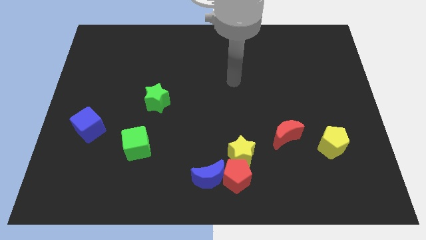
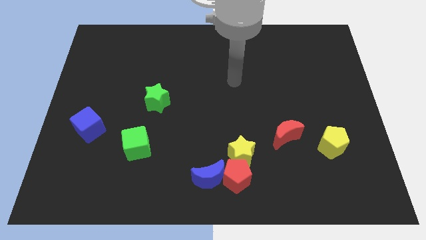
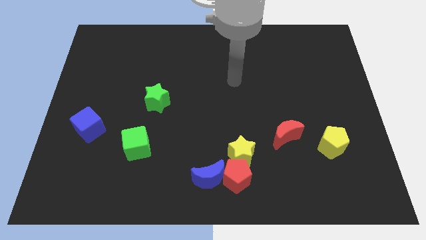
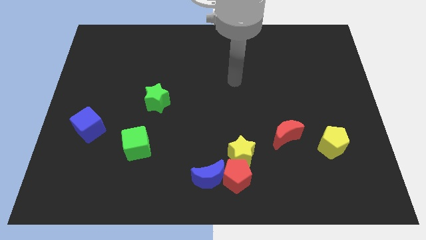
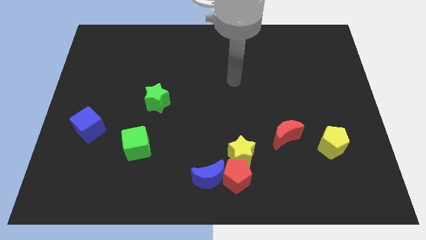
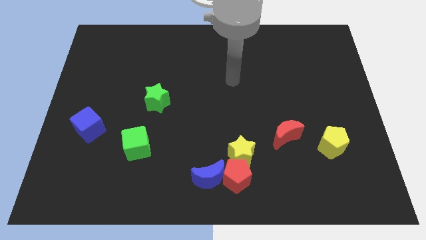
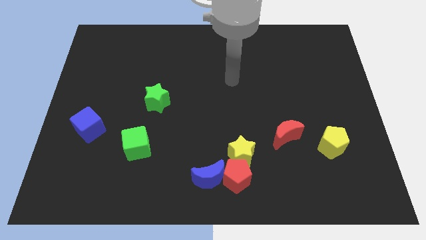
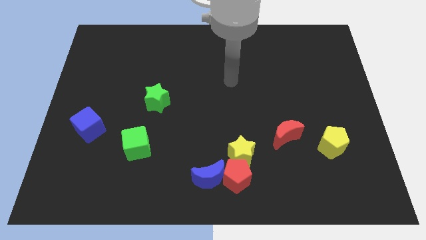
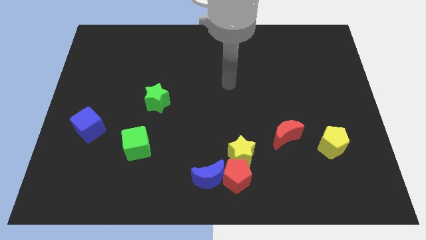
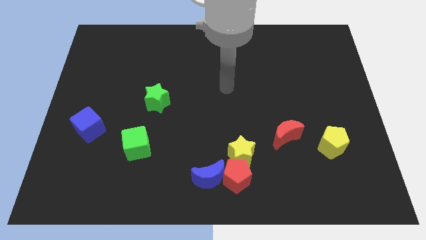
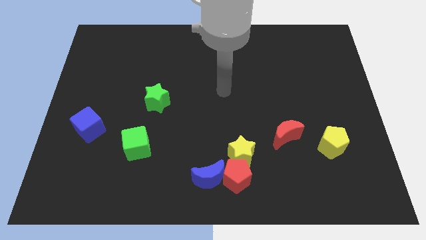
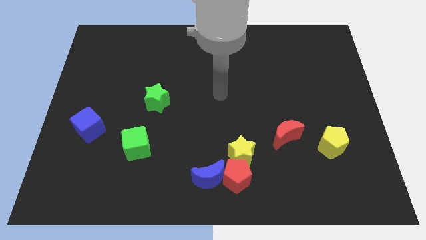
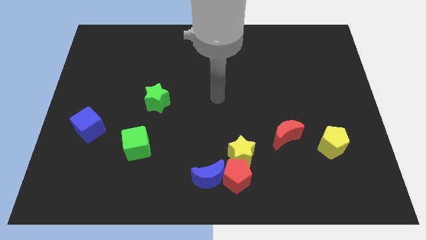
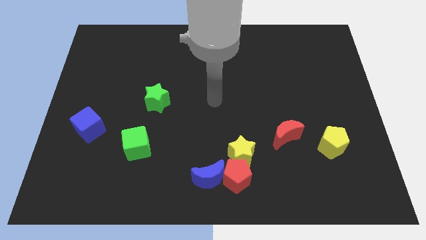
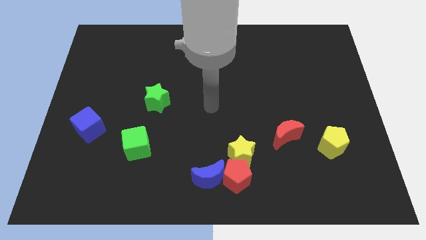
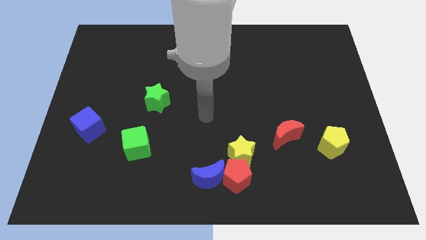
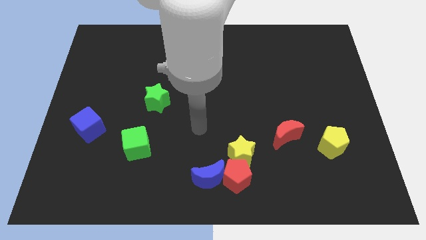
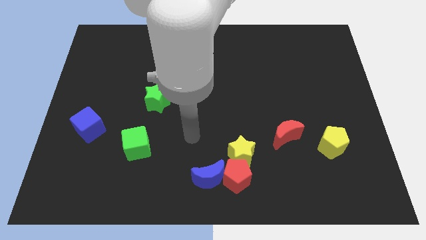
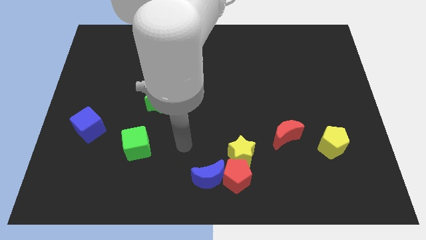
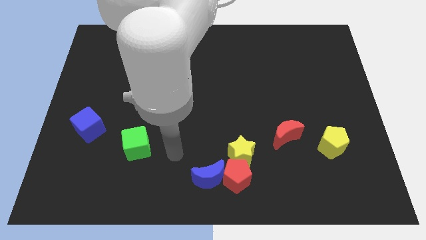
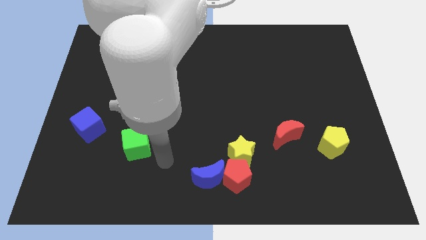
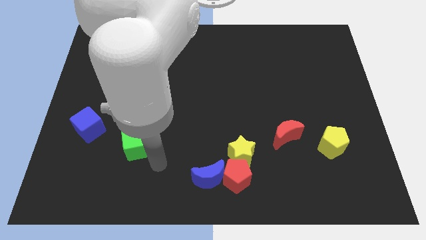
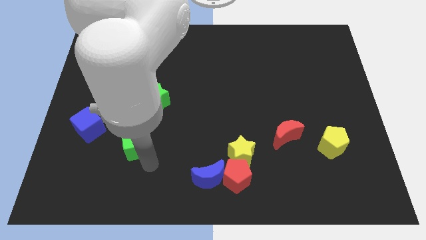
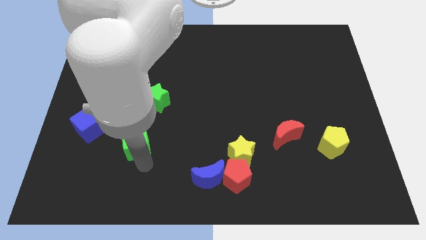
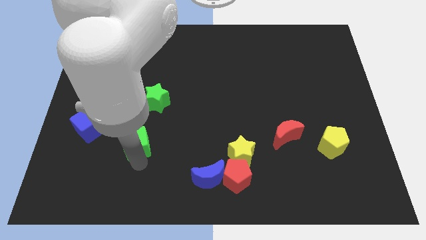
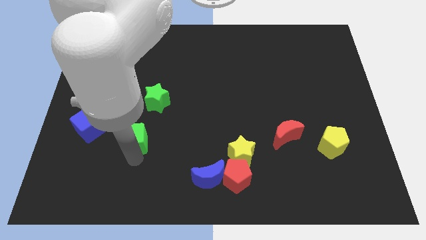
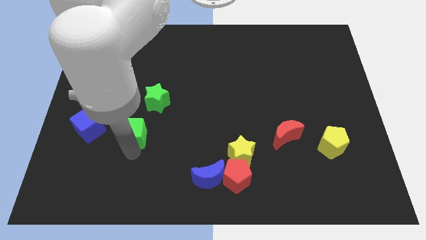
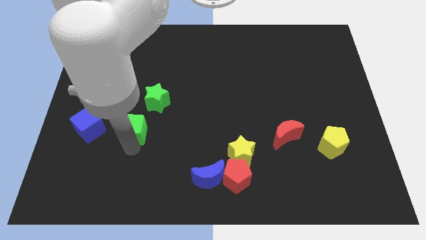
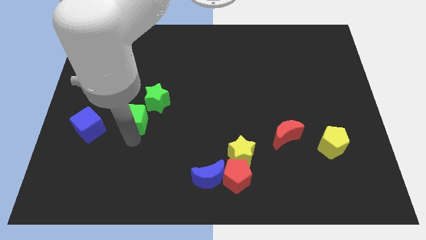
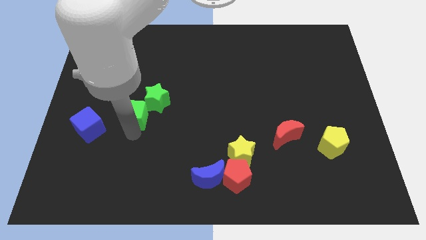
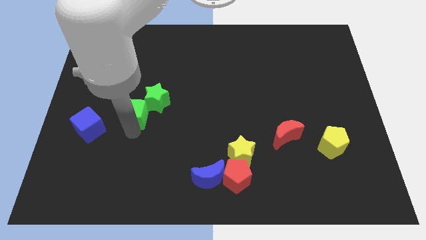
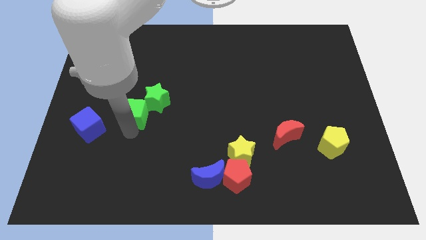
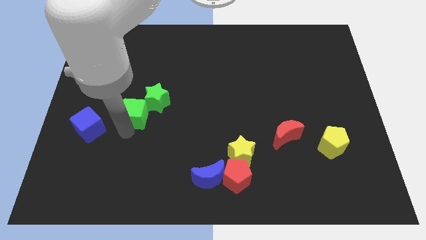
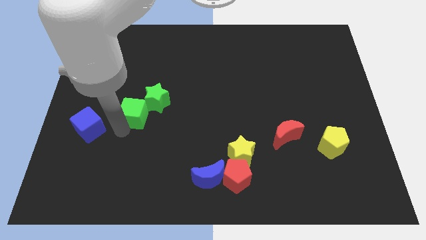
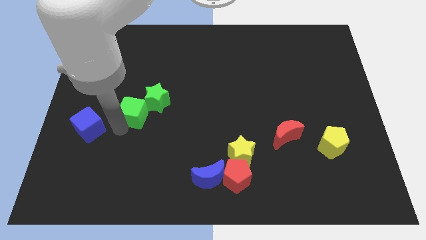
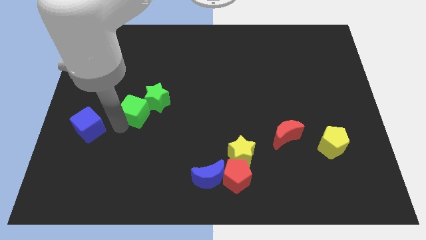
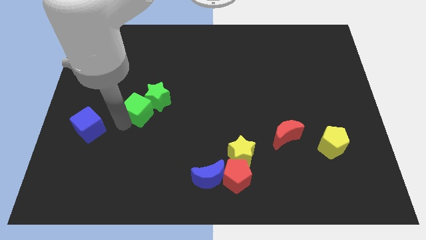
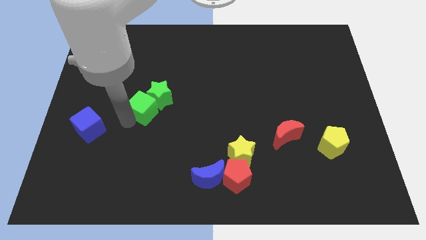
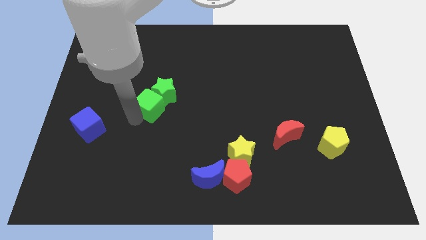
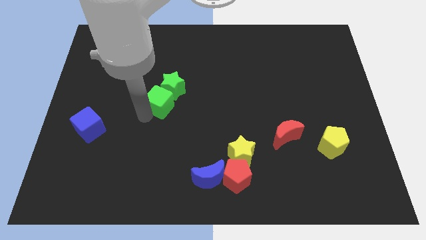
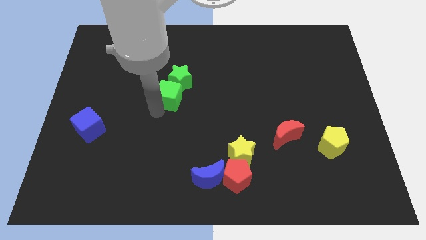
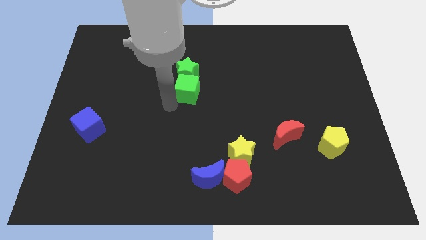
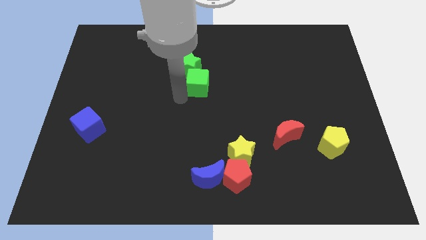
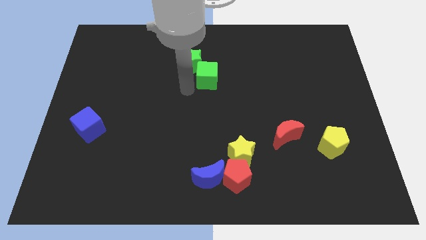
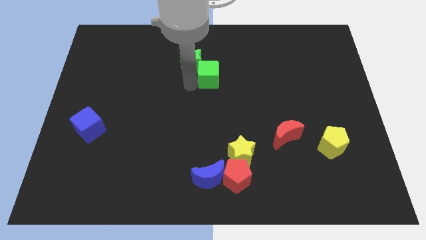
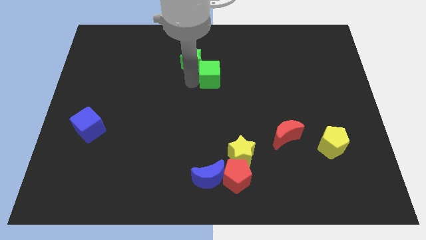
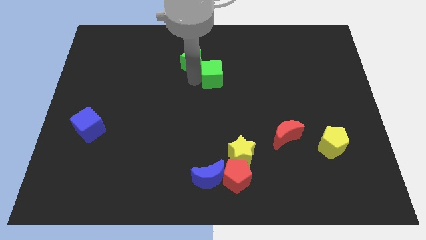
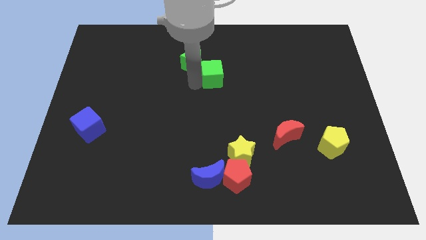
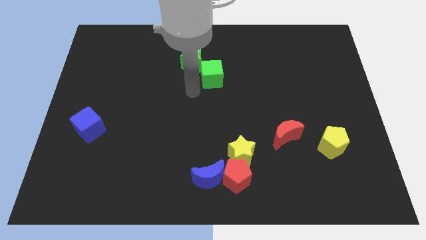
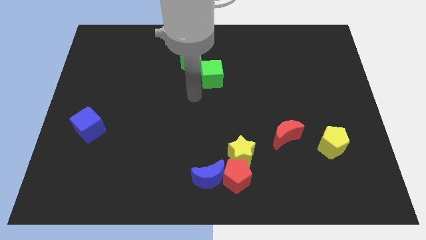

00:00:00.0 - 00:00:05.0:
push the green cube along with the green star to the top center of the board

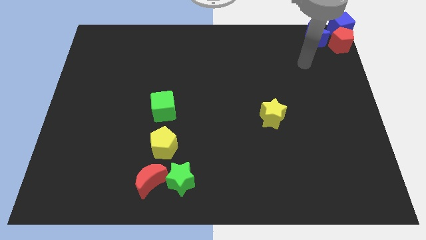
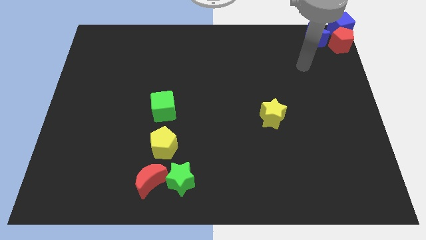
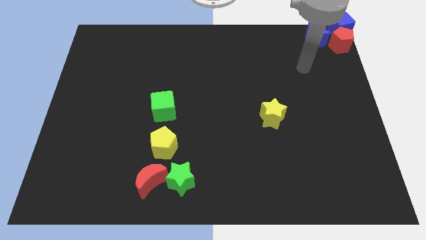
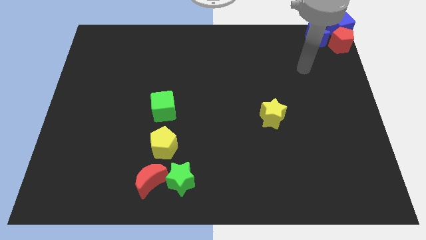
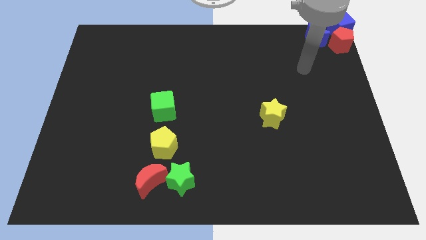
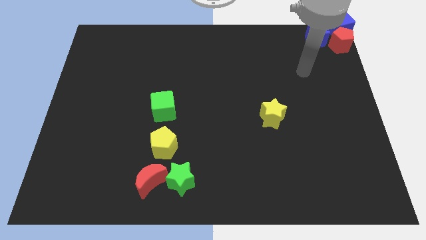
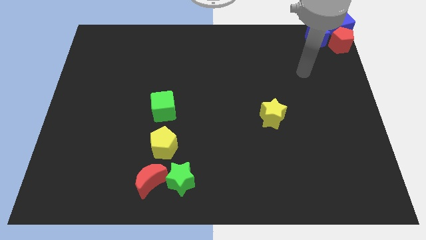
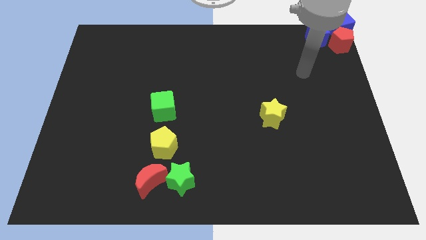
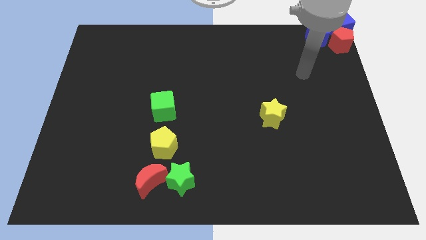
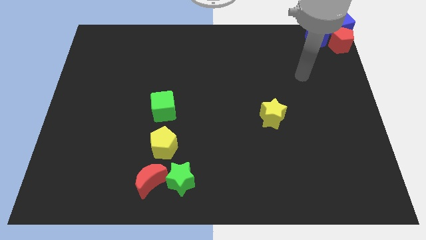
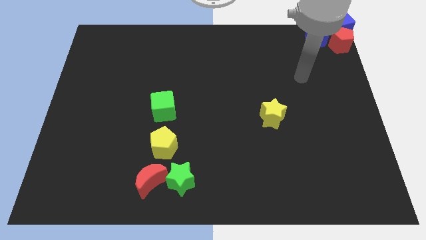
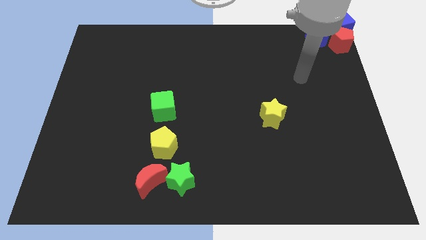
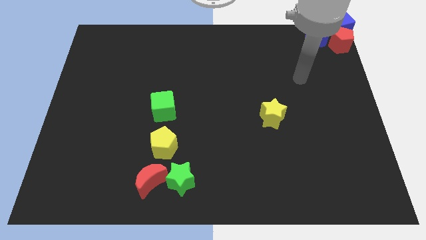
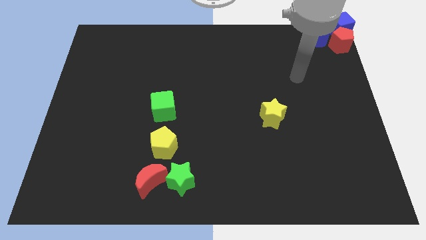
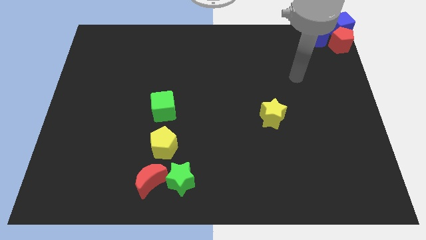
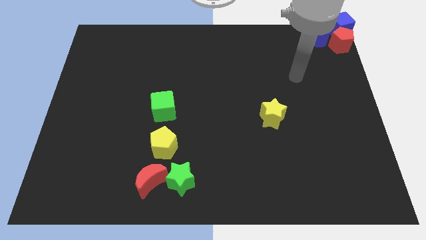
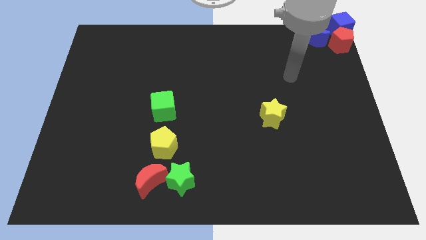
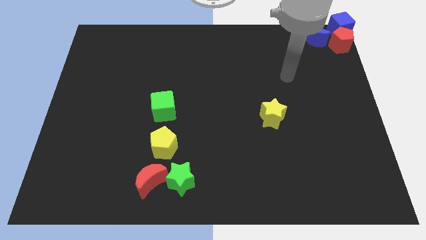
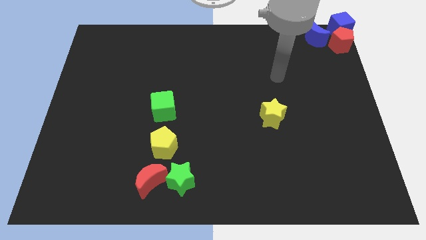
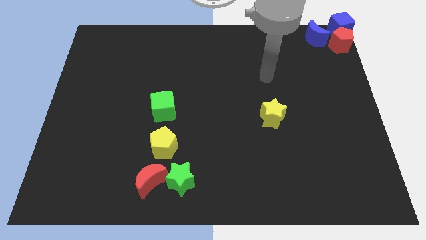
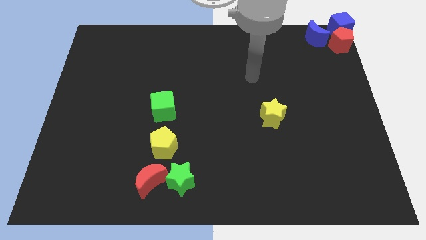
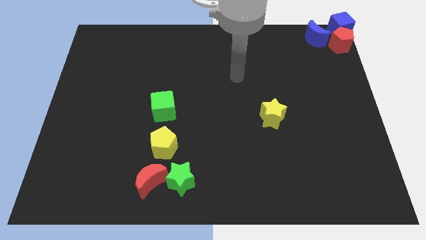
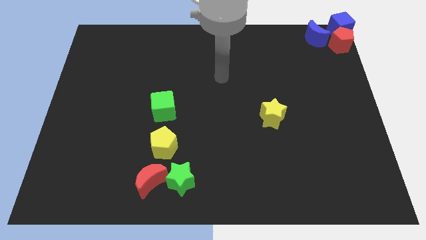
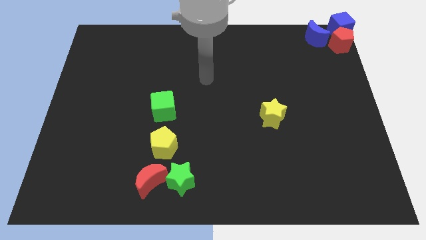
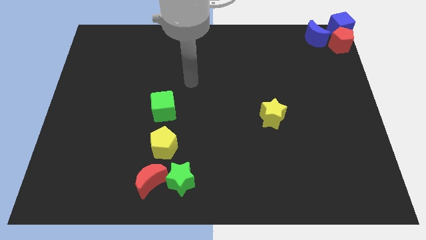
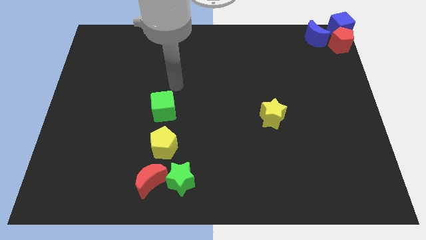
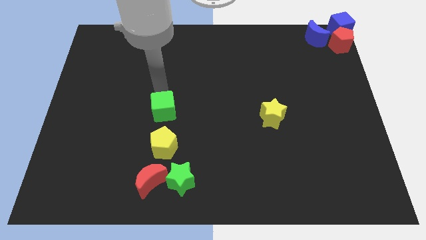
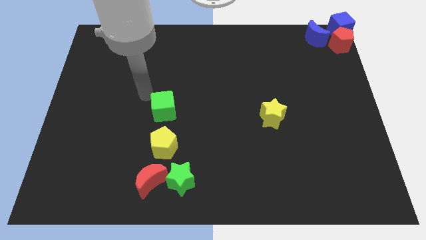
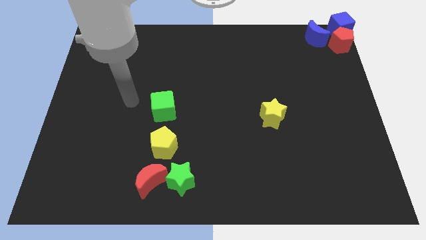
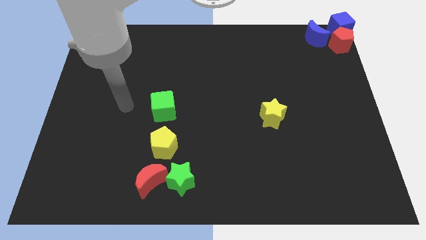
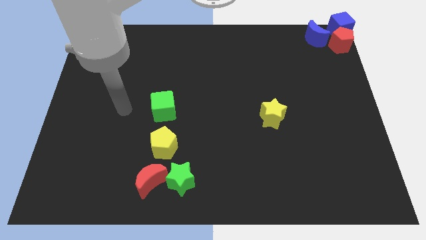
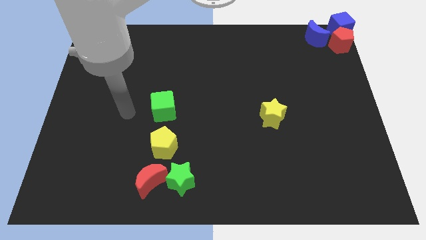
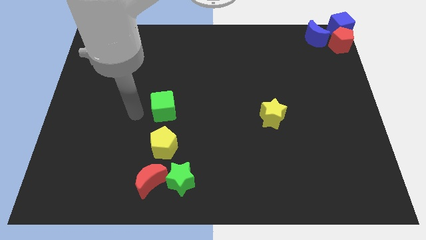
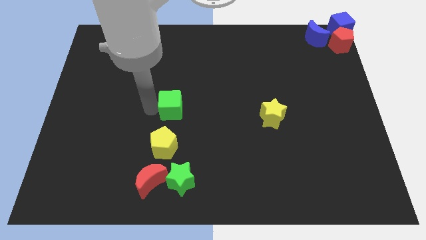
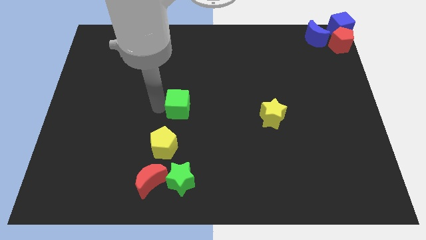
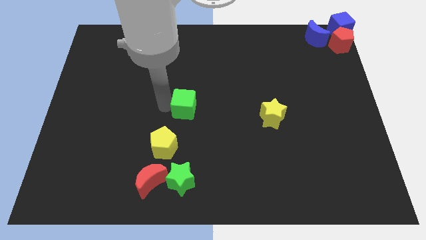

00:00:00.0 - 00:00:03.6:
move the green cube to the right of the board

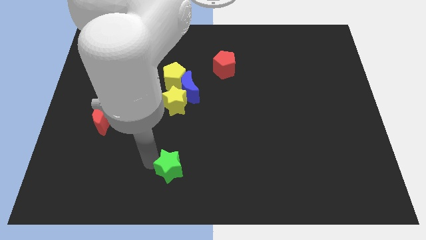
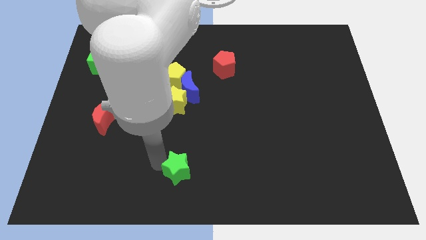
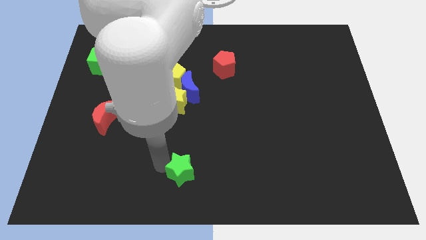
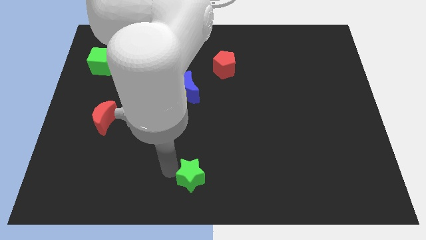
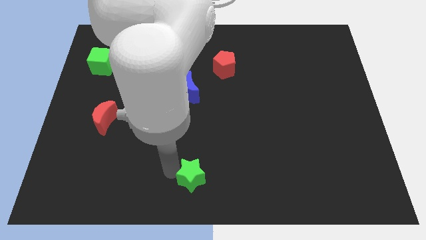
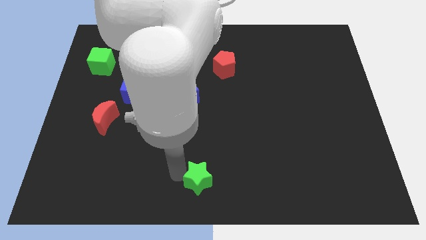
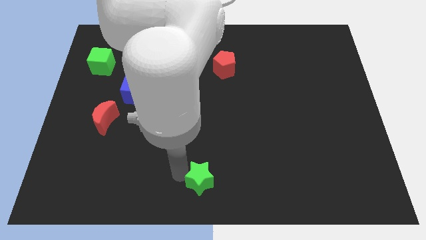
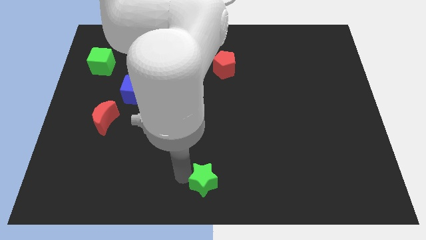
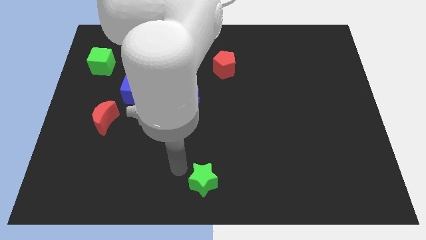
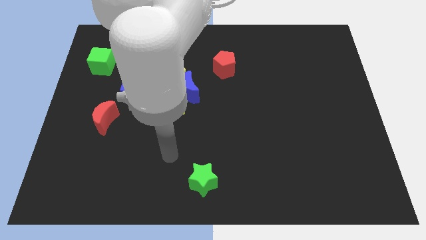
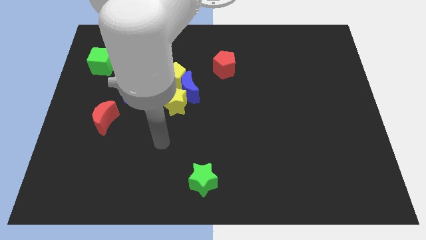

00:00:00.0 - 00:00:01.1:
push green star towards bottom middle of the board
